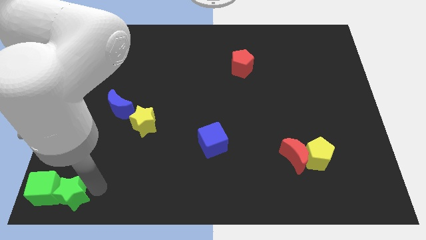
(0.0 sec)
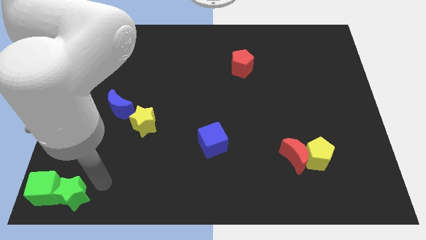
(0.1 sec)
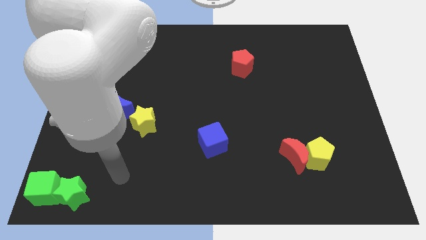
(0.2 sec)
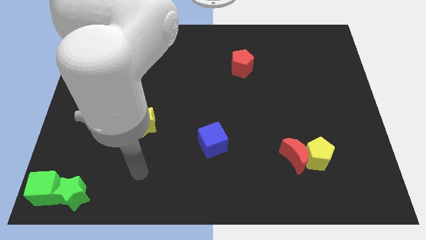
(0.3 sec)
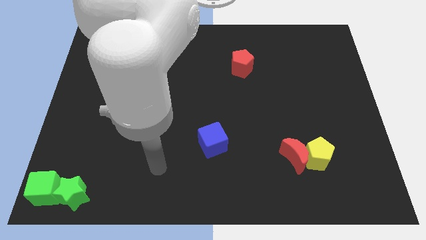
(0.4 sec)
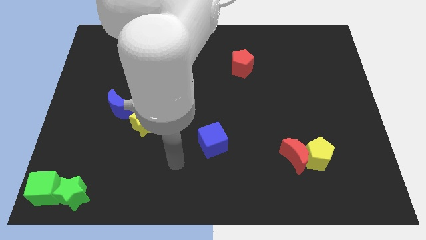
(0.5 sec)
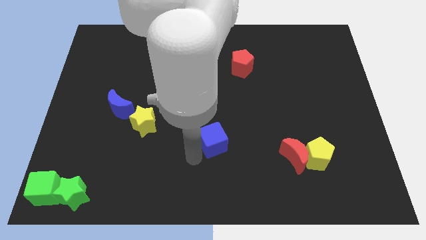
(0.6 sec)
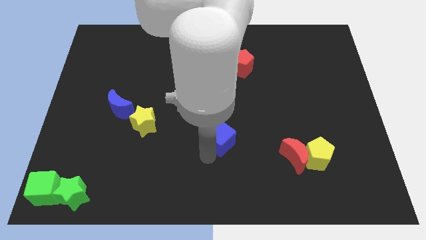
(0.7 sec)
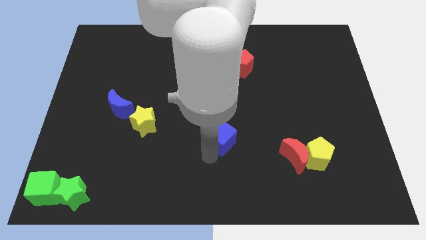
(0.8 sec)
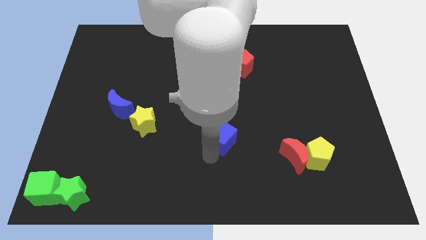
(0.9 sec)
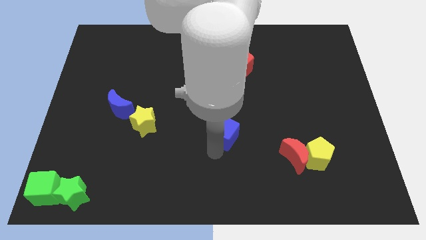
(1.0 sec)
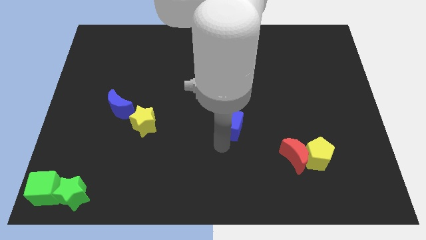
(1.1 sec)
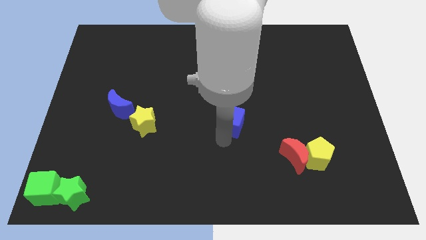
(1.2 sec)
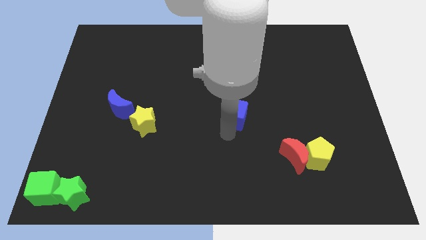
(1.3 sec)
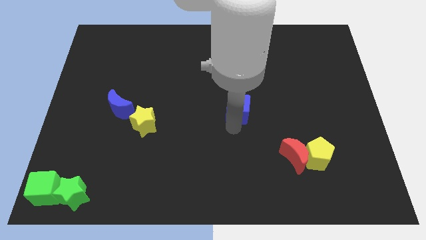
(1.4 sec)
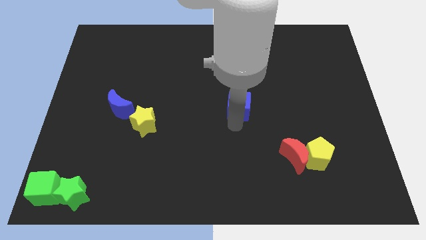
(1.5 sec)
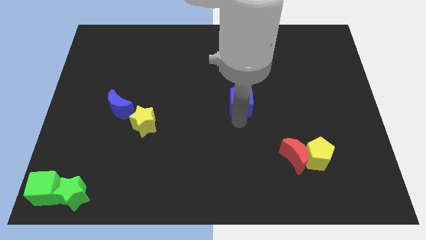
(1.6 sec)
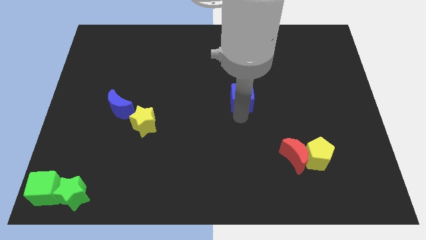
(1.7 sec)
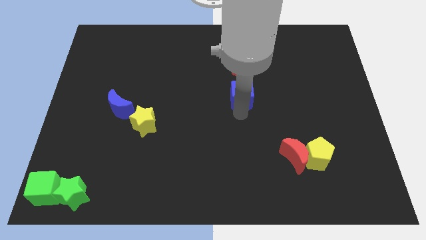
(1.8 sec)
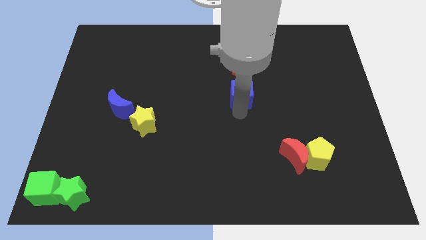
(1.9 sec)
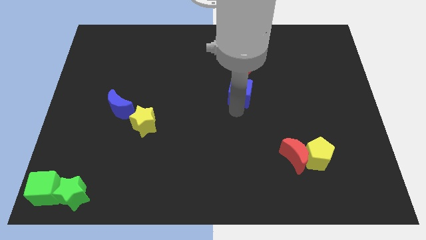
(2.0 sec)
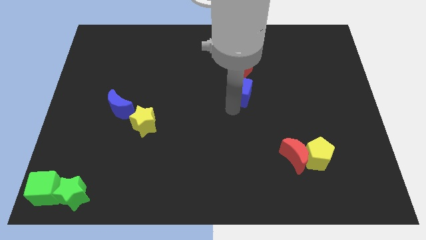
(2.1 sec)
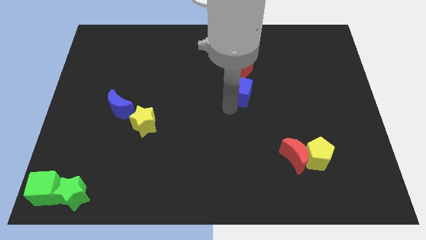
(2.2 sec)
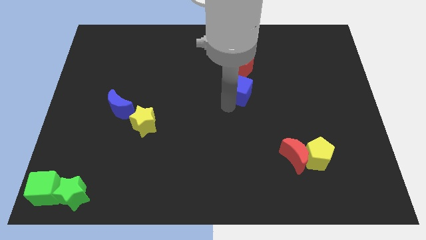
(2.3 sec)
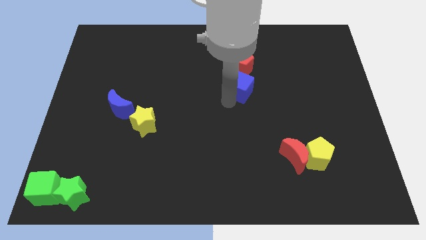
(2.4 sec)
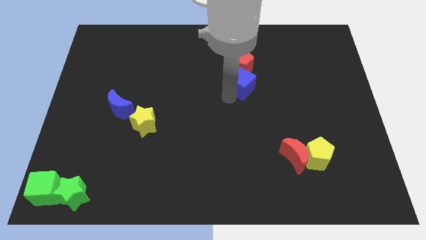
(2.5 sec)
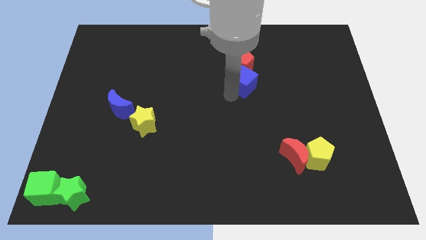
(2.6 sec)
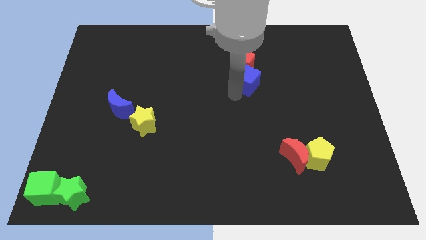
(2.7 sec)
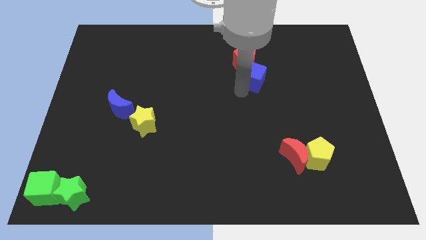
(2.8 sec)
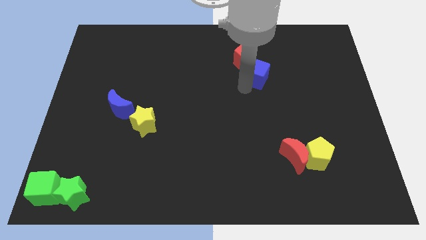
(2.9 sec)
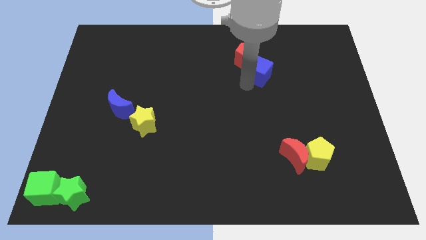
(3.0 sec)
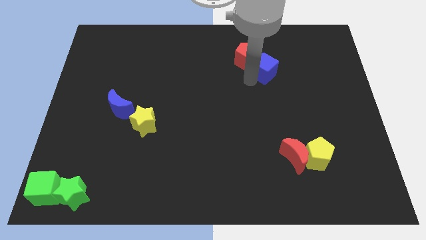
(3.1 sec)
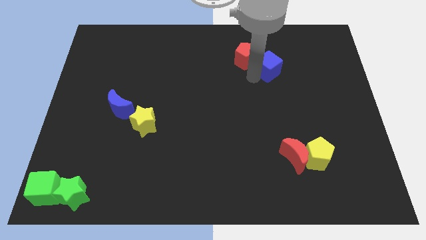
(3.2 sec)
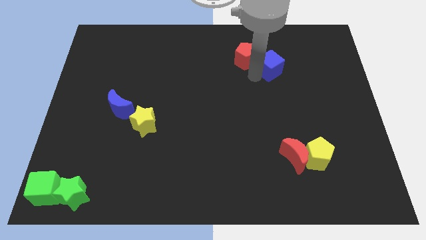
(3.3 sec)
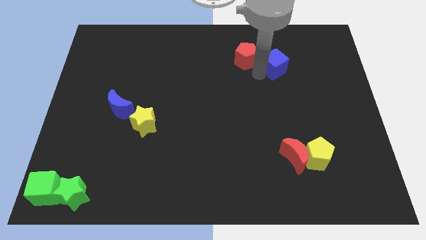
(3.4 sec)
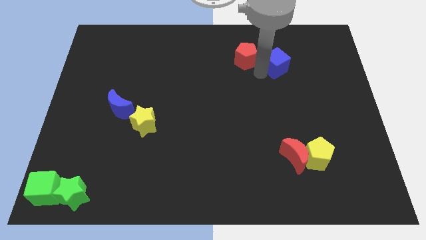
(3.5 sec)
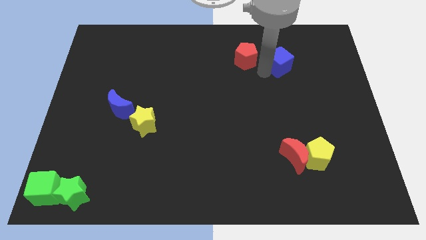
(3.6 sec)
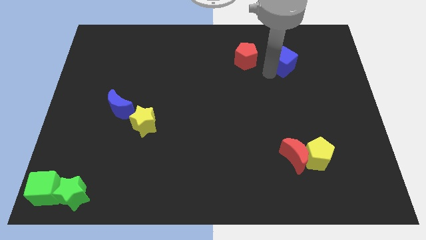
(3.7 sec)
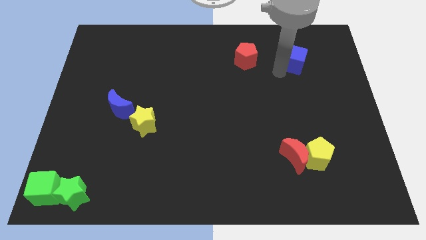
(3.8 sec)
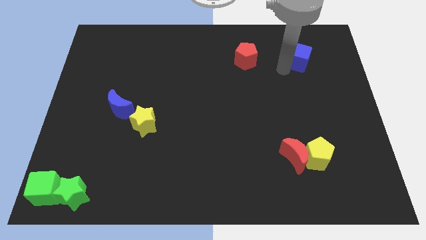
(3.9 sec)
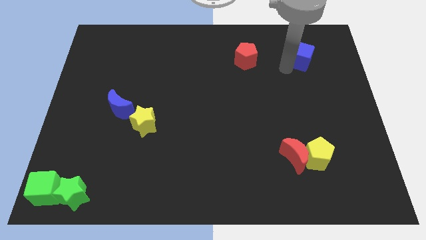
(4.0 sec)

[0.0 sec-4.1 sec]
move the blue cube parallel right to the red pentagon

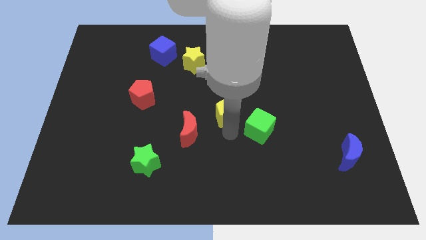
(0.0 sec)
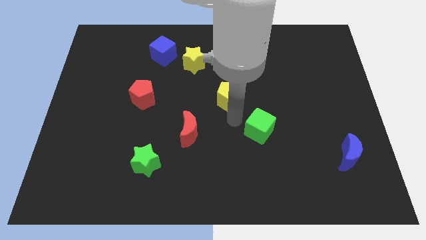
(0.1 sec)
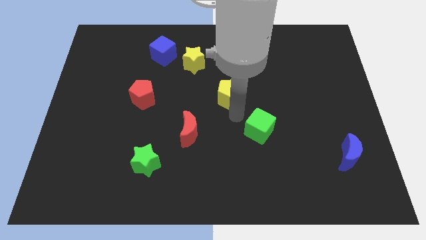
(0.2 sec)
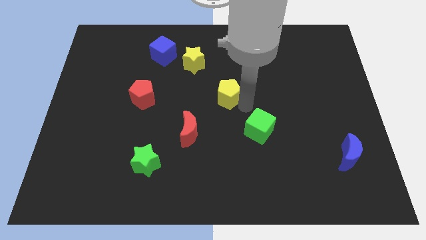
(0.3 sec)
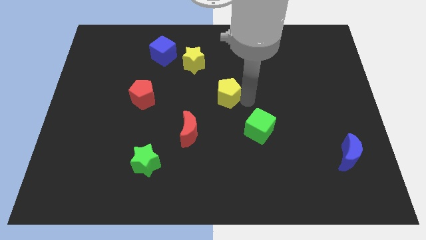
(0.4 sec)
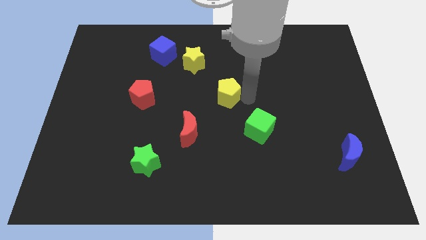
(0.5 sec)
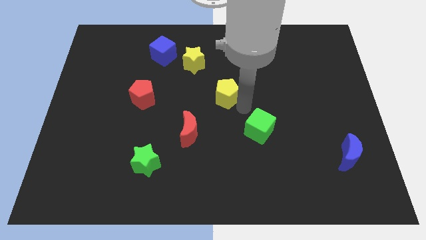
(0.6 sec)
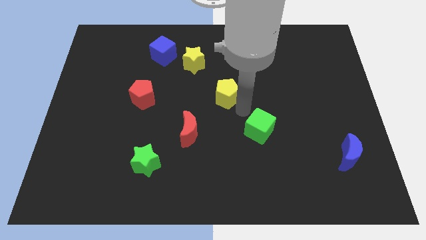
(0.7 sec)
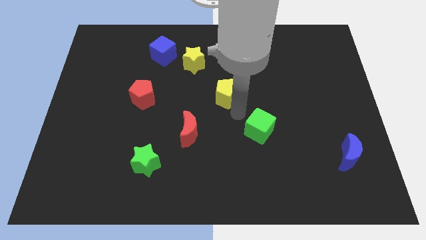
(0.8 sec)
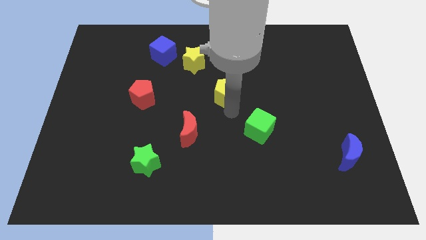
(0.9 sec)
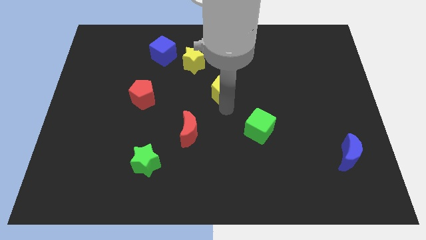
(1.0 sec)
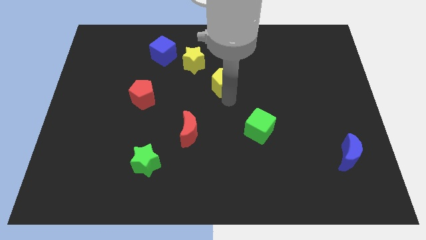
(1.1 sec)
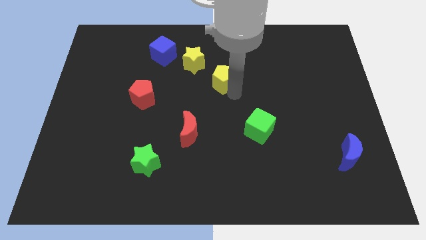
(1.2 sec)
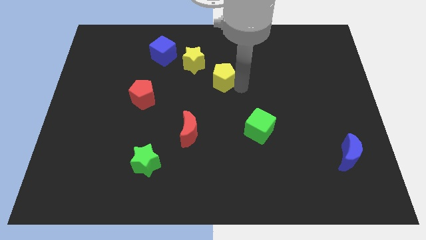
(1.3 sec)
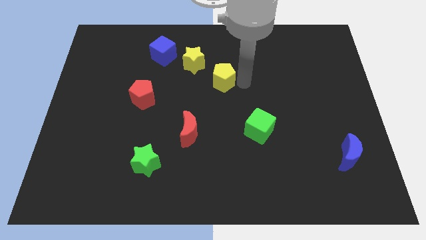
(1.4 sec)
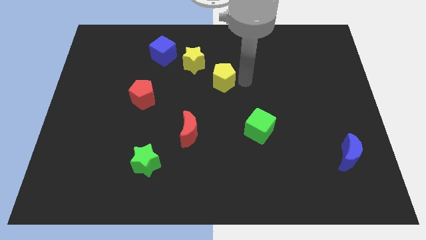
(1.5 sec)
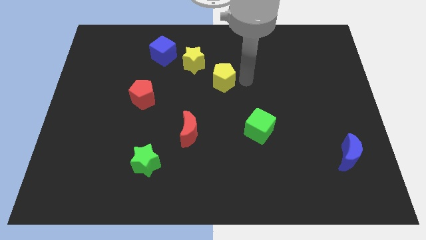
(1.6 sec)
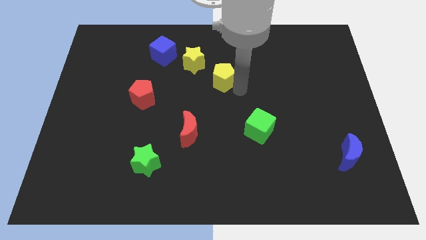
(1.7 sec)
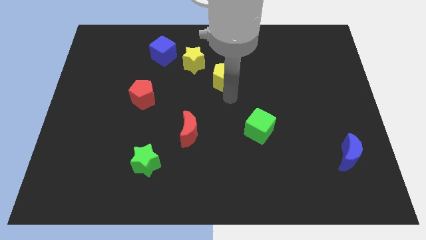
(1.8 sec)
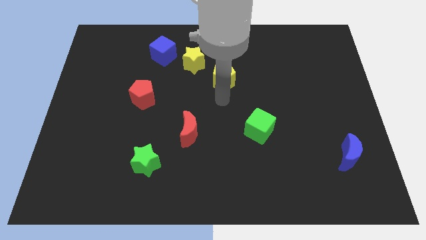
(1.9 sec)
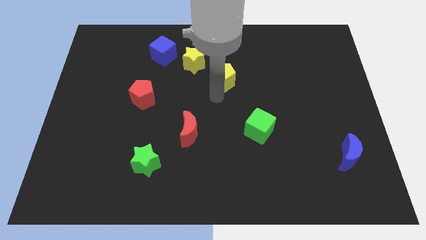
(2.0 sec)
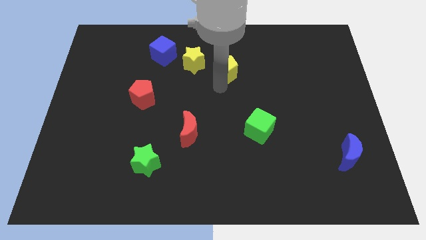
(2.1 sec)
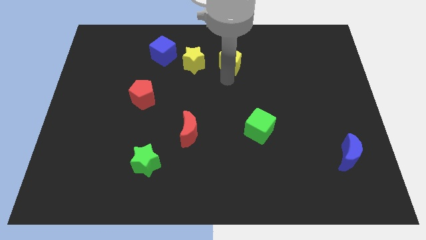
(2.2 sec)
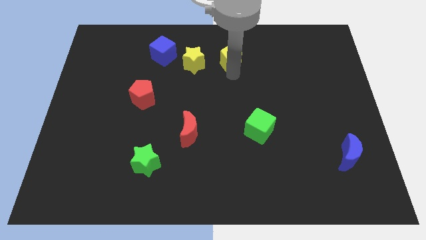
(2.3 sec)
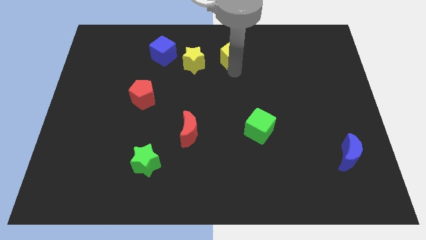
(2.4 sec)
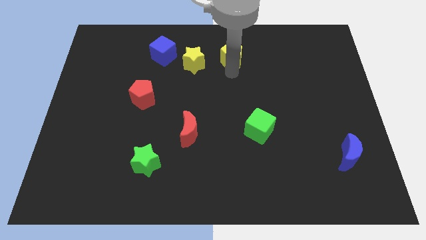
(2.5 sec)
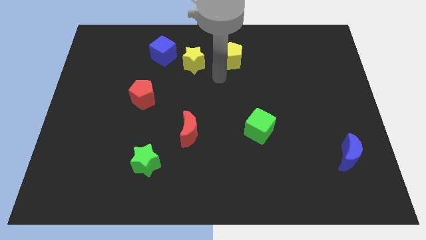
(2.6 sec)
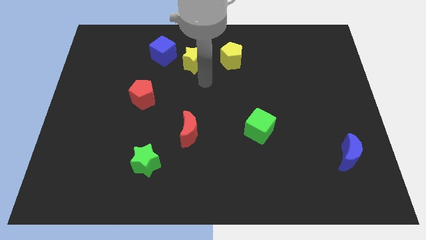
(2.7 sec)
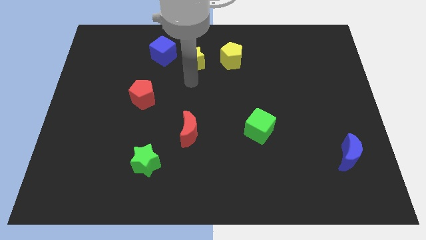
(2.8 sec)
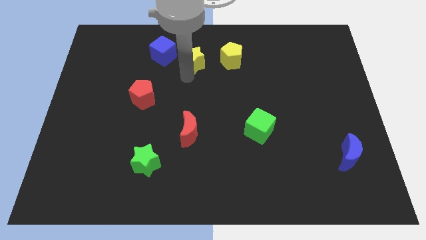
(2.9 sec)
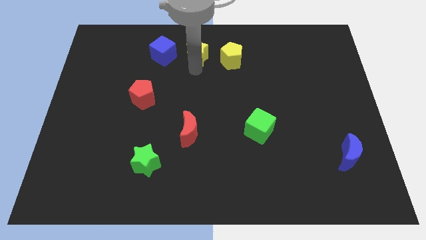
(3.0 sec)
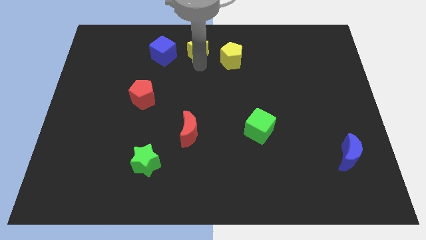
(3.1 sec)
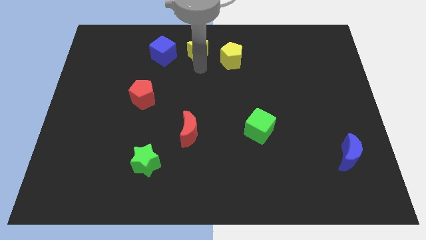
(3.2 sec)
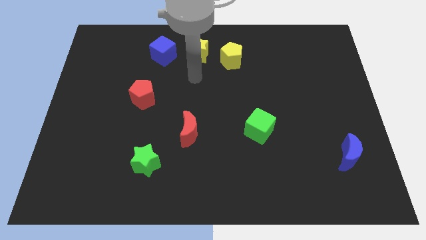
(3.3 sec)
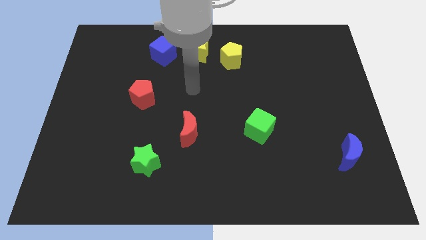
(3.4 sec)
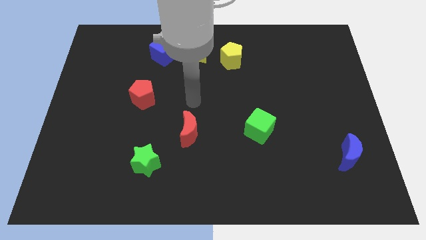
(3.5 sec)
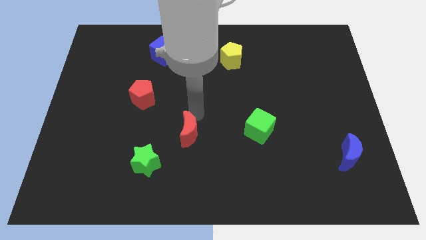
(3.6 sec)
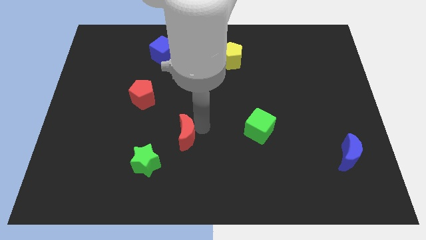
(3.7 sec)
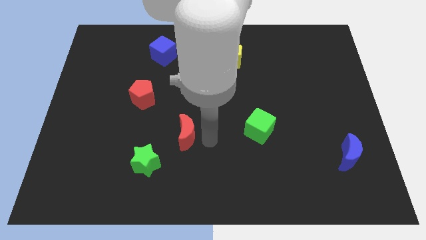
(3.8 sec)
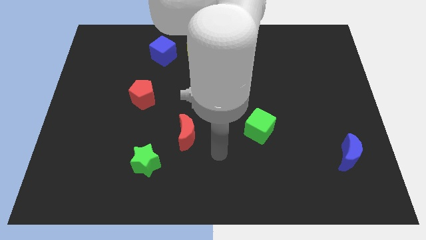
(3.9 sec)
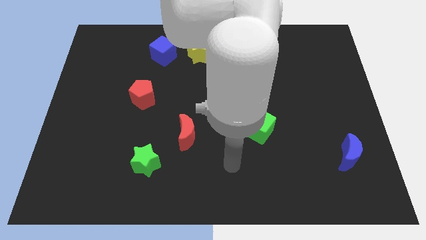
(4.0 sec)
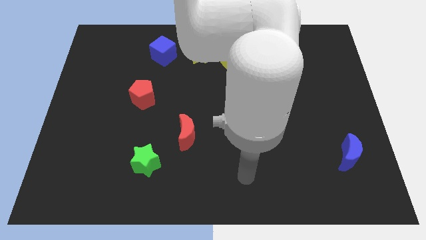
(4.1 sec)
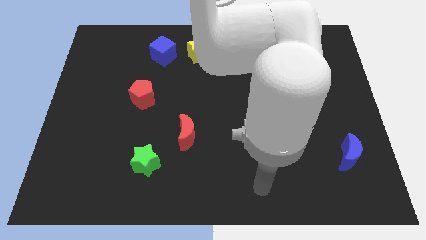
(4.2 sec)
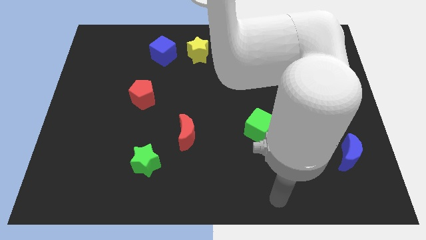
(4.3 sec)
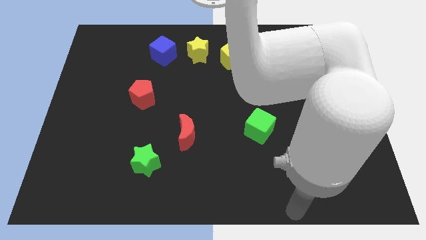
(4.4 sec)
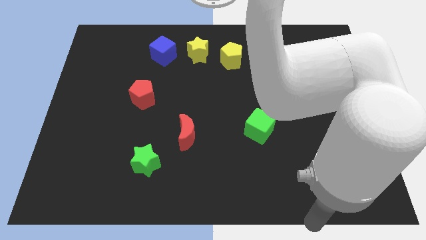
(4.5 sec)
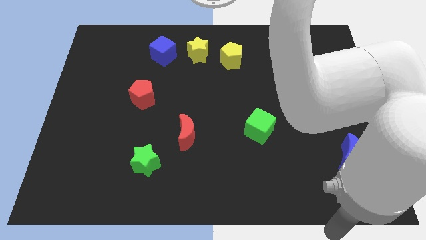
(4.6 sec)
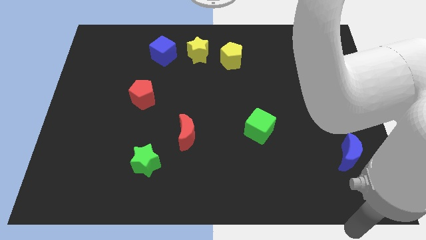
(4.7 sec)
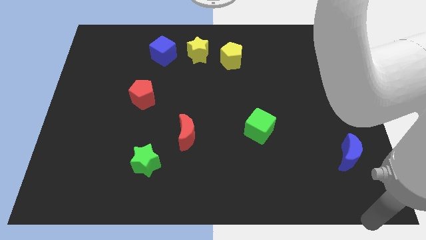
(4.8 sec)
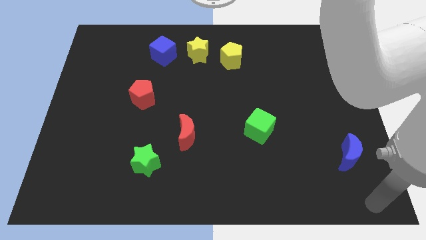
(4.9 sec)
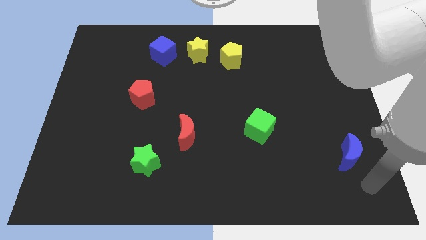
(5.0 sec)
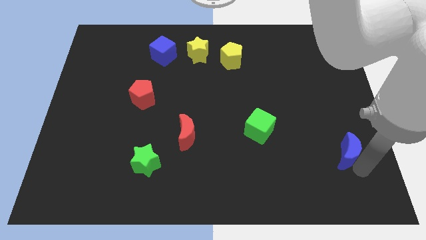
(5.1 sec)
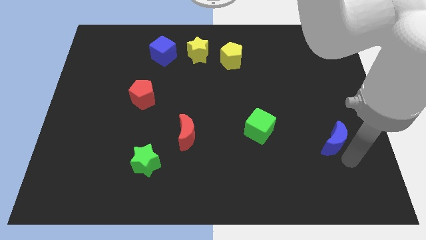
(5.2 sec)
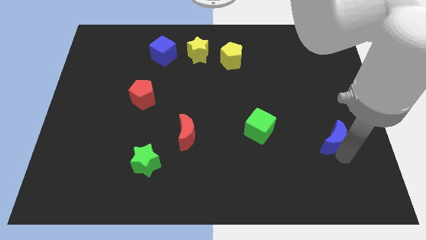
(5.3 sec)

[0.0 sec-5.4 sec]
move the yellow pentagon to right of the yellow star
